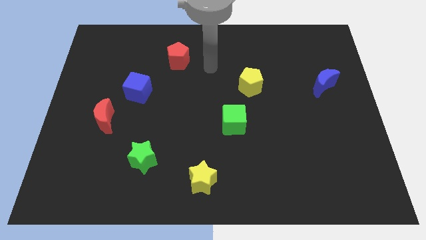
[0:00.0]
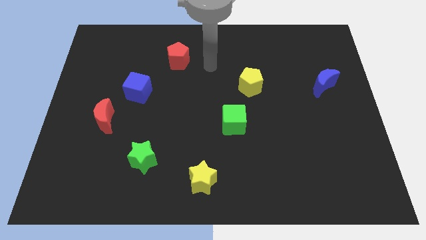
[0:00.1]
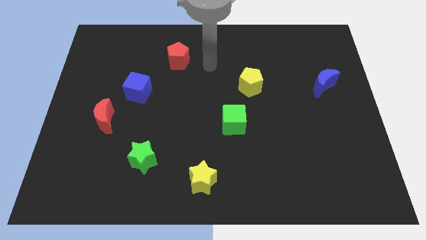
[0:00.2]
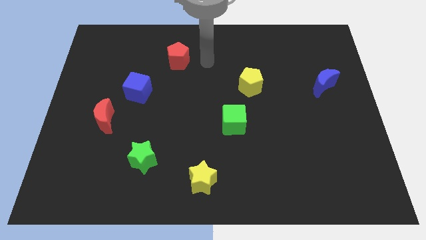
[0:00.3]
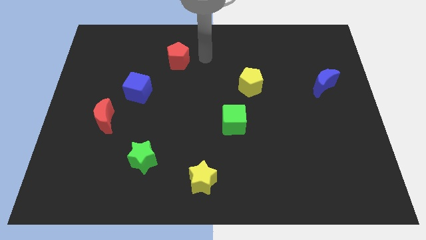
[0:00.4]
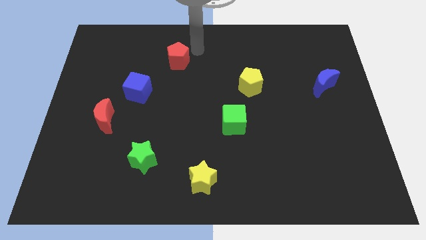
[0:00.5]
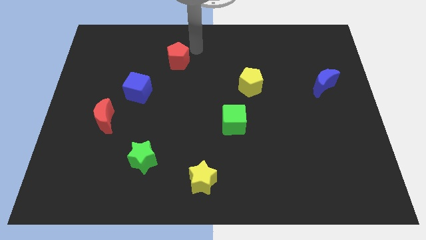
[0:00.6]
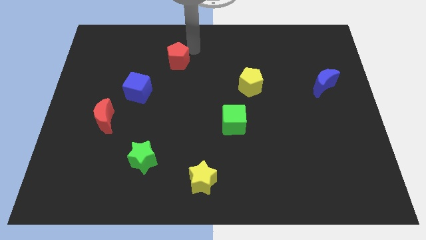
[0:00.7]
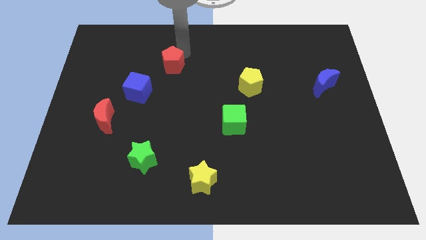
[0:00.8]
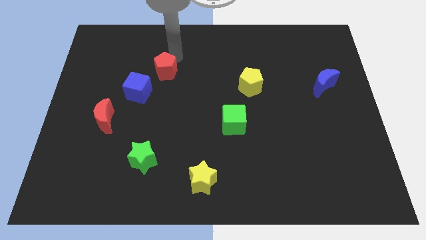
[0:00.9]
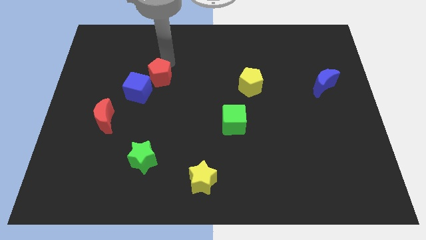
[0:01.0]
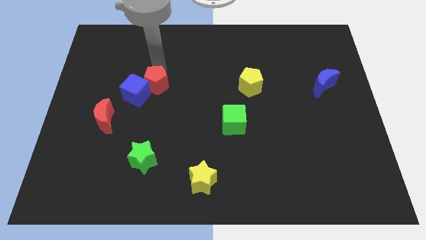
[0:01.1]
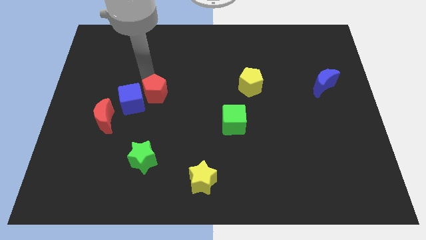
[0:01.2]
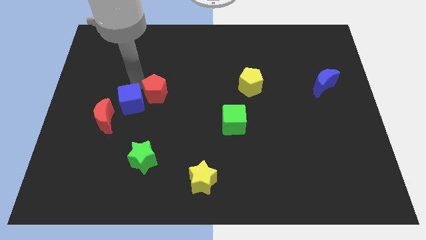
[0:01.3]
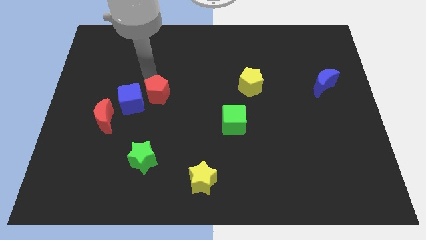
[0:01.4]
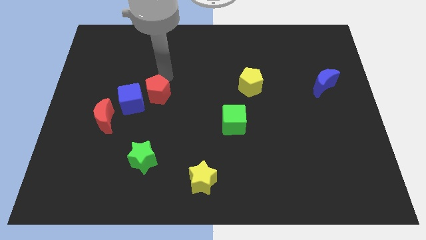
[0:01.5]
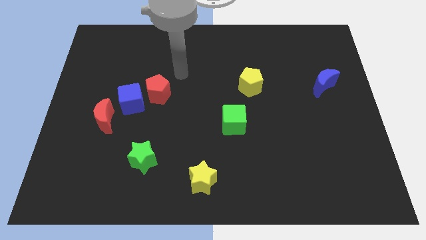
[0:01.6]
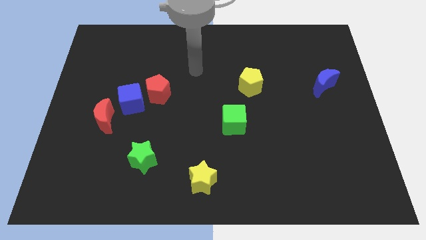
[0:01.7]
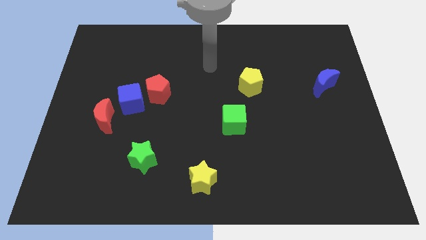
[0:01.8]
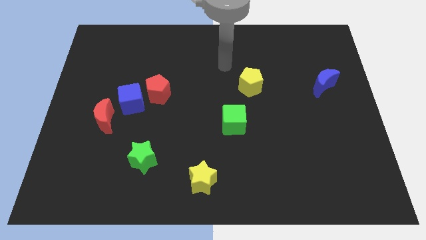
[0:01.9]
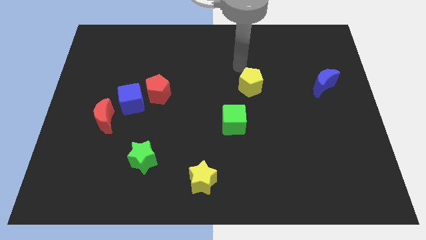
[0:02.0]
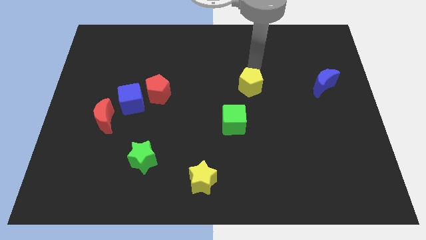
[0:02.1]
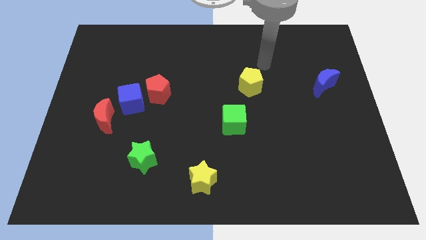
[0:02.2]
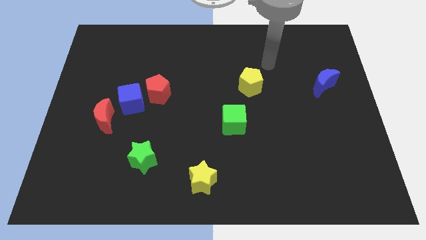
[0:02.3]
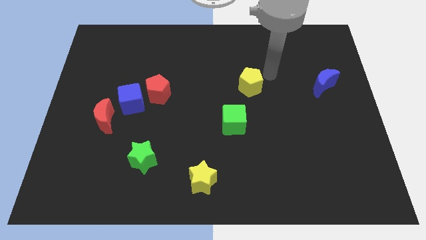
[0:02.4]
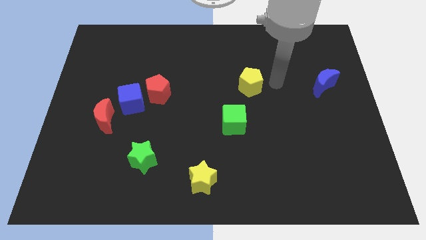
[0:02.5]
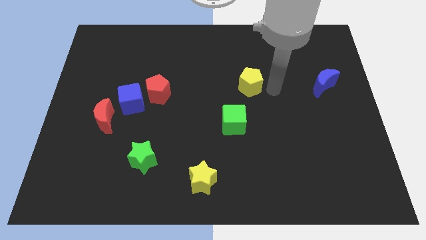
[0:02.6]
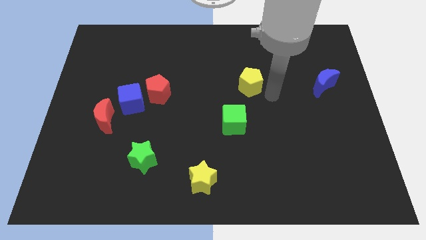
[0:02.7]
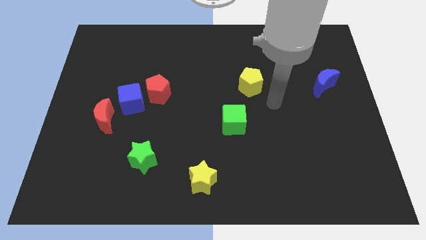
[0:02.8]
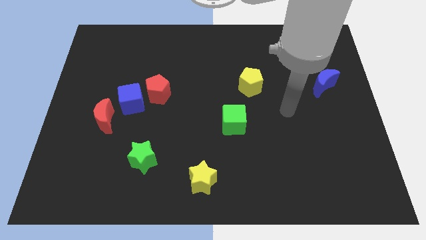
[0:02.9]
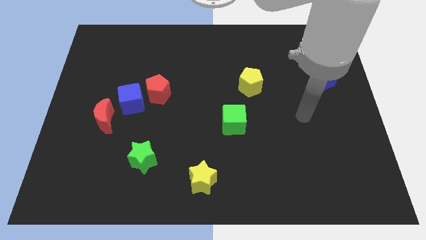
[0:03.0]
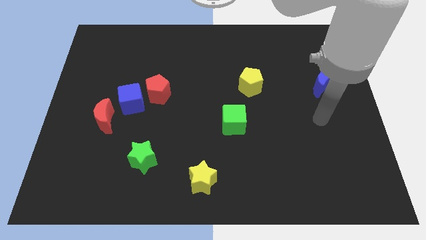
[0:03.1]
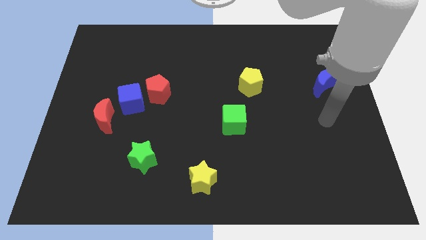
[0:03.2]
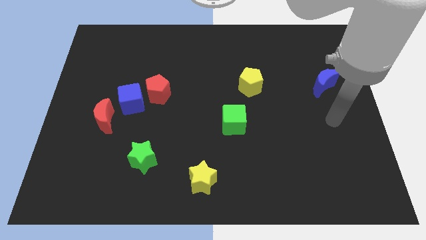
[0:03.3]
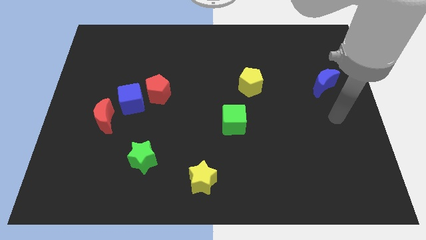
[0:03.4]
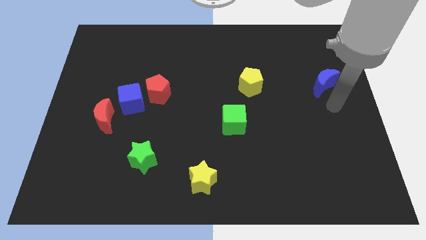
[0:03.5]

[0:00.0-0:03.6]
push the red pentagon to the right of the blue cube

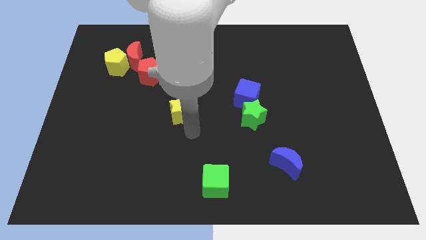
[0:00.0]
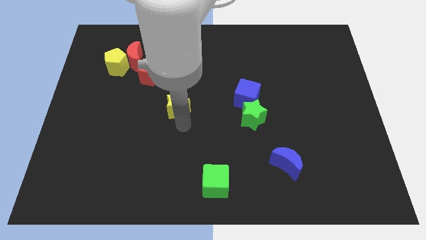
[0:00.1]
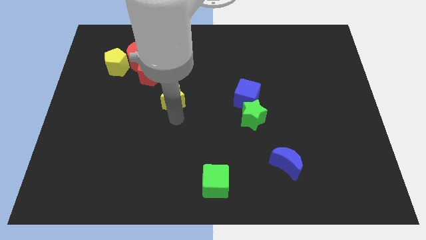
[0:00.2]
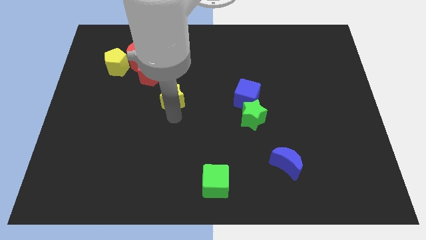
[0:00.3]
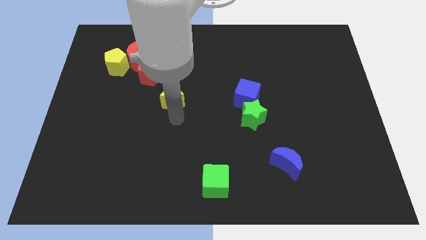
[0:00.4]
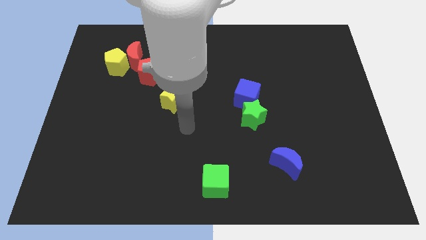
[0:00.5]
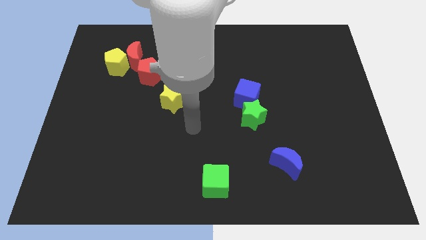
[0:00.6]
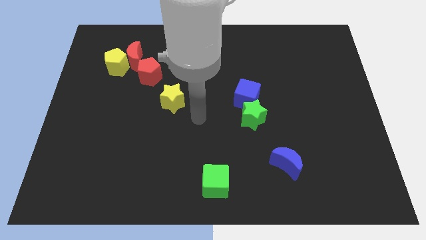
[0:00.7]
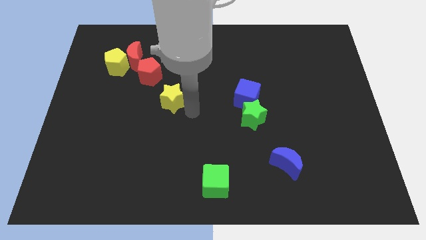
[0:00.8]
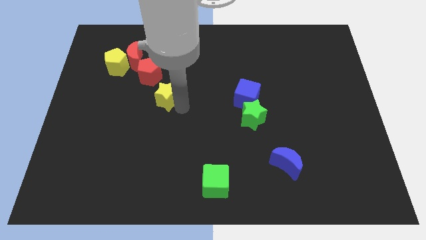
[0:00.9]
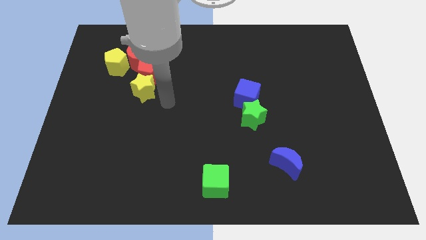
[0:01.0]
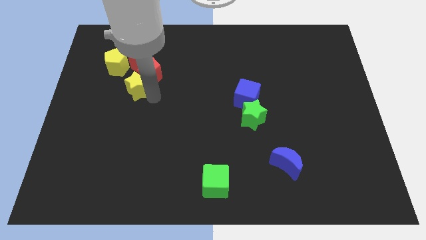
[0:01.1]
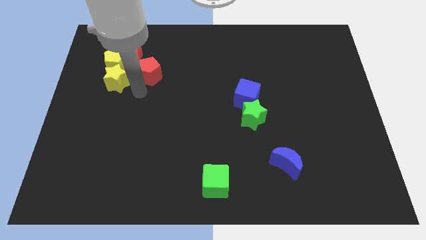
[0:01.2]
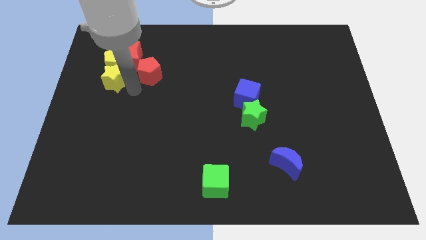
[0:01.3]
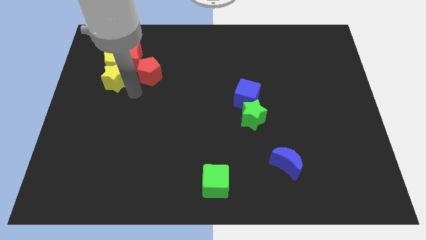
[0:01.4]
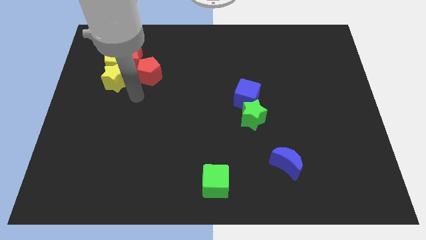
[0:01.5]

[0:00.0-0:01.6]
place yellow star below the yellow pentagon

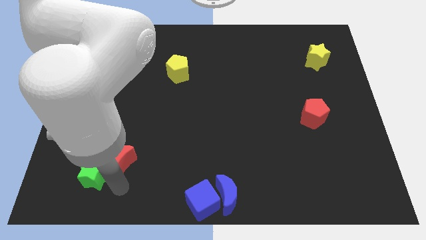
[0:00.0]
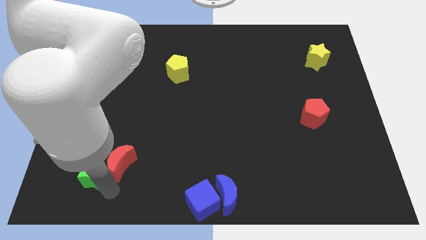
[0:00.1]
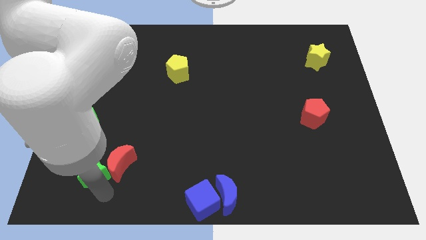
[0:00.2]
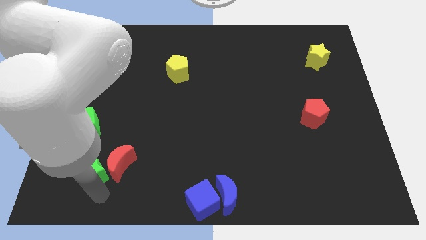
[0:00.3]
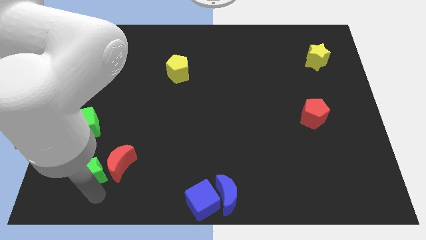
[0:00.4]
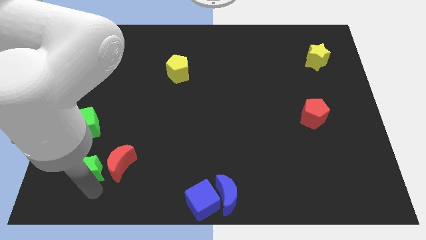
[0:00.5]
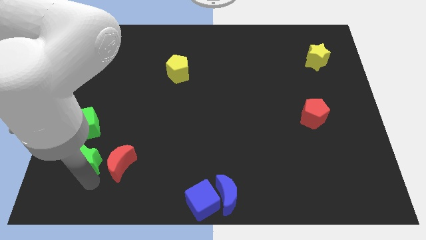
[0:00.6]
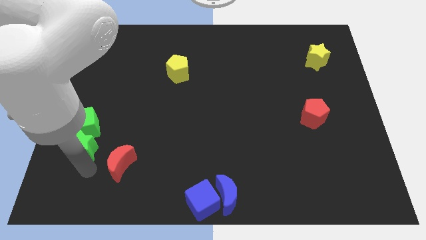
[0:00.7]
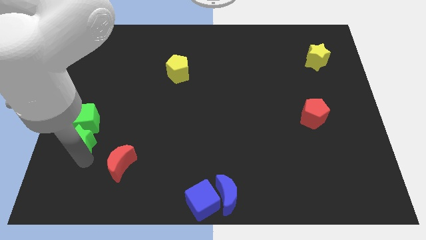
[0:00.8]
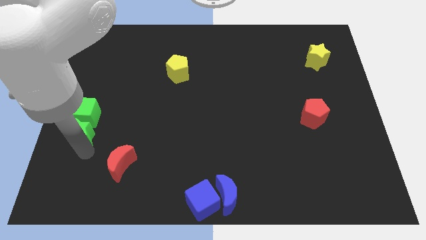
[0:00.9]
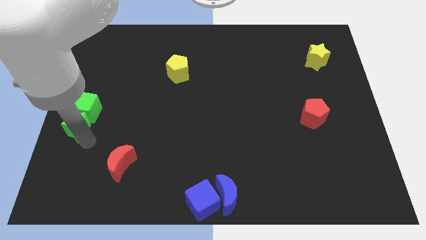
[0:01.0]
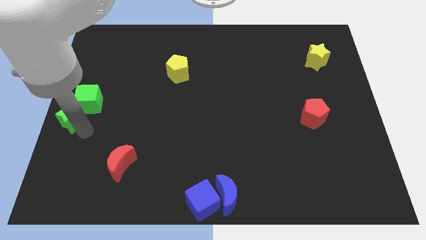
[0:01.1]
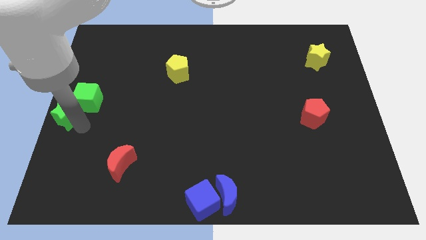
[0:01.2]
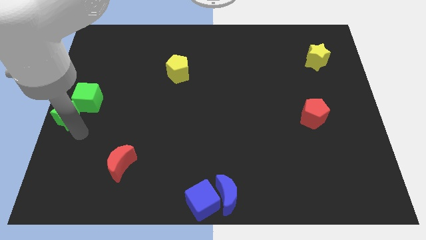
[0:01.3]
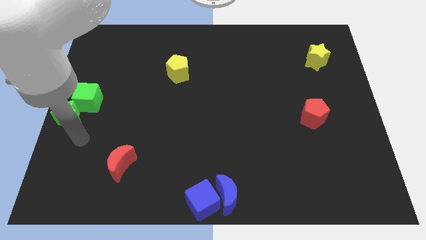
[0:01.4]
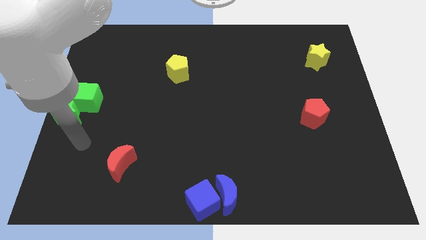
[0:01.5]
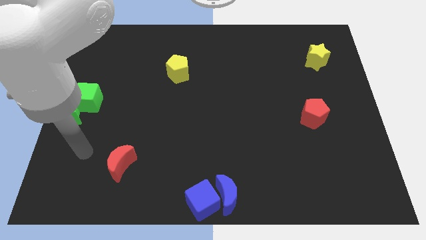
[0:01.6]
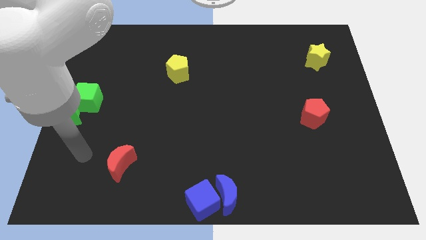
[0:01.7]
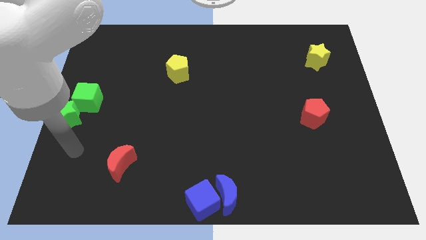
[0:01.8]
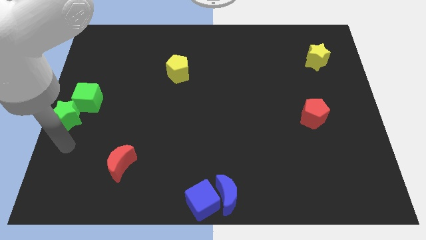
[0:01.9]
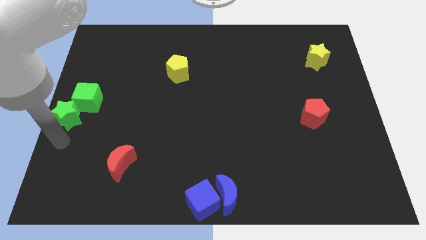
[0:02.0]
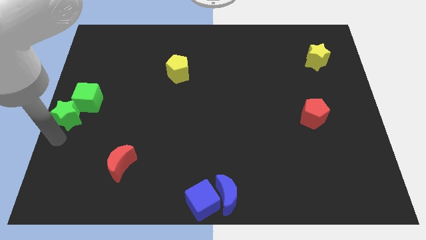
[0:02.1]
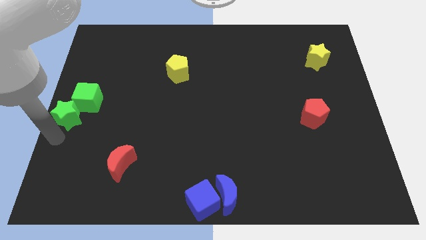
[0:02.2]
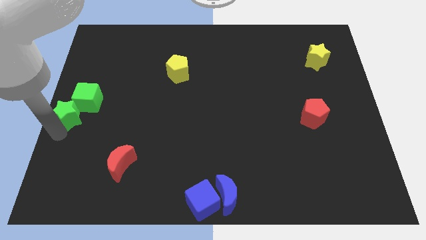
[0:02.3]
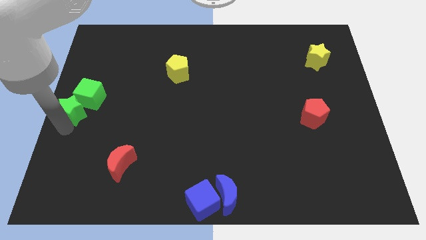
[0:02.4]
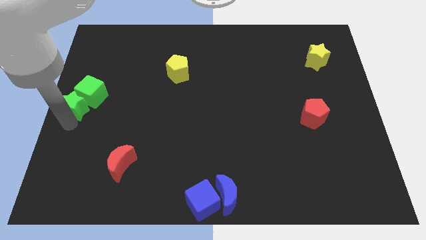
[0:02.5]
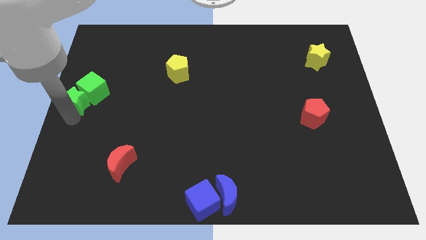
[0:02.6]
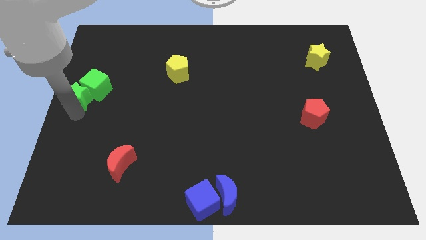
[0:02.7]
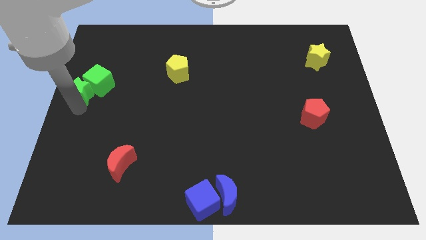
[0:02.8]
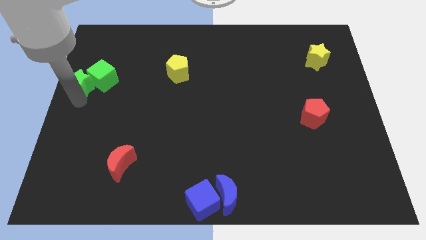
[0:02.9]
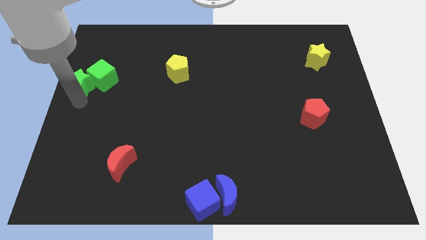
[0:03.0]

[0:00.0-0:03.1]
push the green star into green cube towards the top left

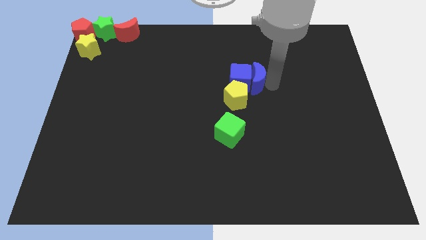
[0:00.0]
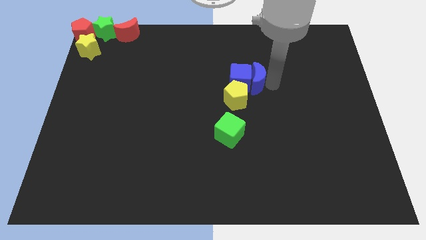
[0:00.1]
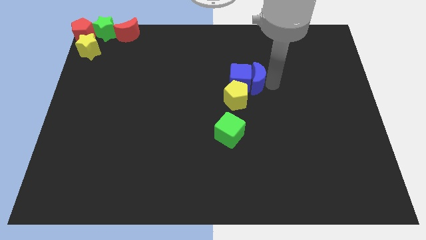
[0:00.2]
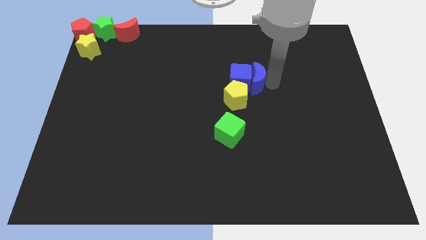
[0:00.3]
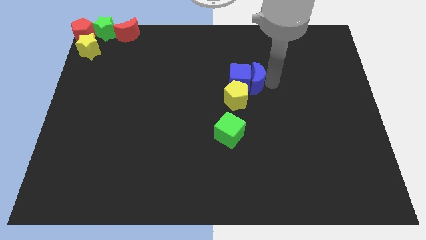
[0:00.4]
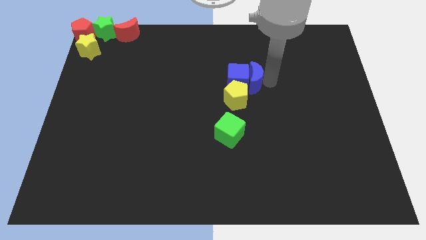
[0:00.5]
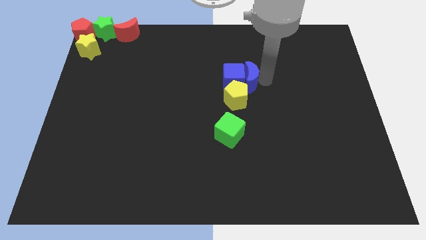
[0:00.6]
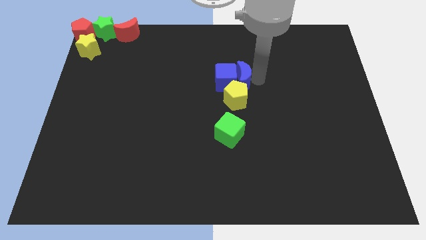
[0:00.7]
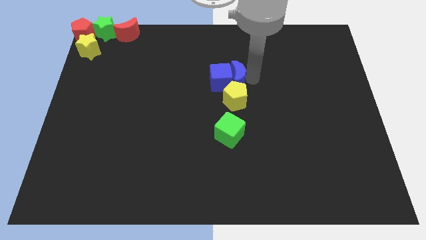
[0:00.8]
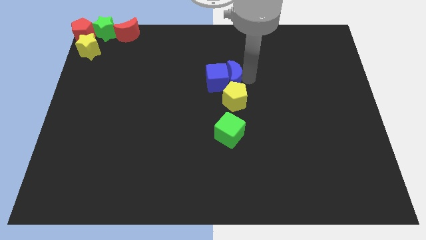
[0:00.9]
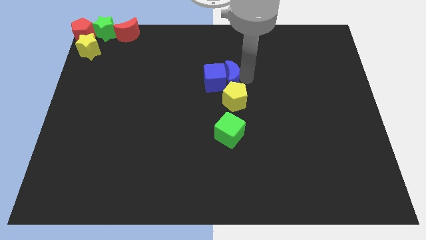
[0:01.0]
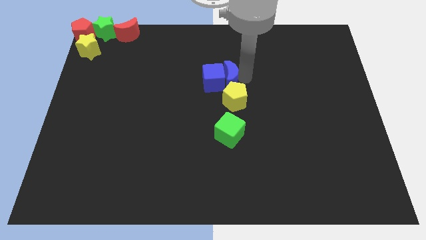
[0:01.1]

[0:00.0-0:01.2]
move the blue blocks to the left
